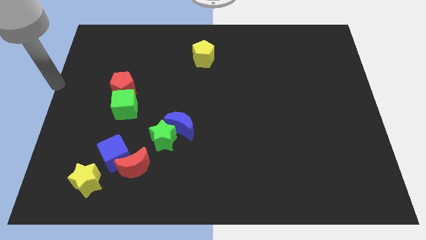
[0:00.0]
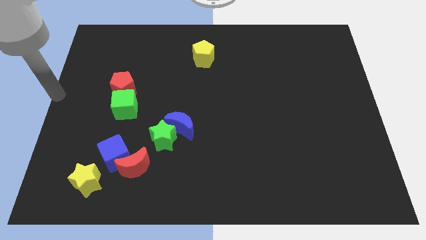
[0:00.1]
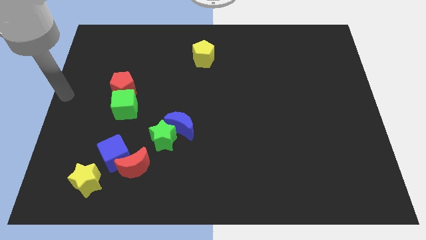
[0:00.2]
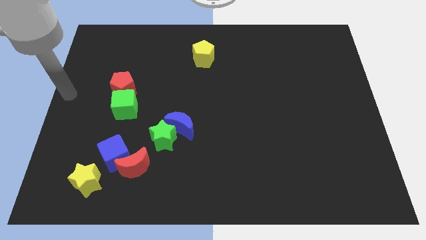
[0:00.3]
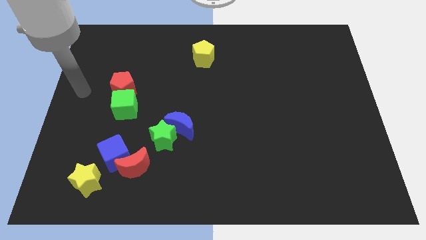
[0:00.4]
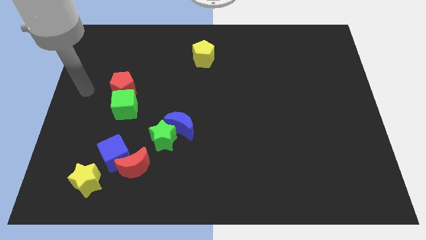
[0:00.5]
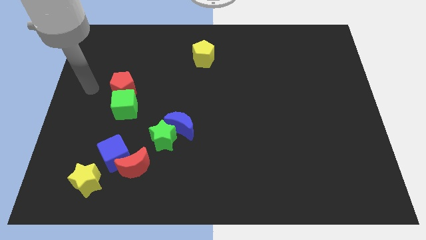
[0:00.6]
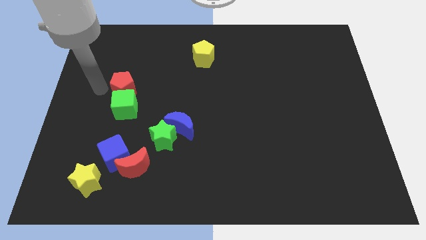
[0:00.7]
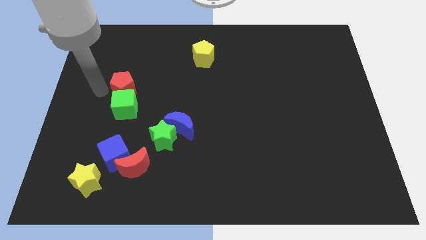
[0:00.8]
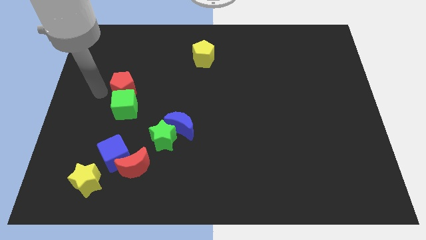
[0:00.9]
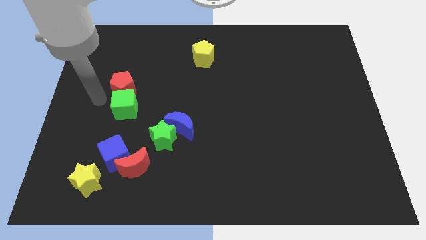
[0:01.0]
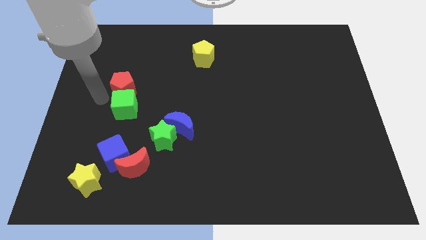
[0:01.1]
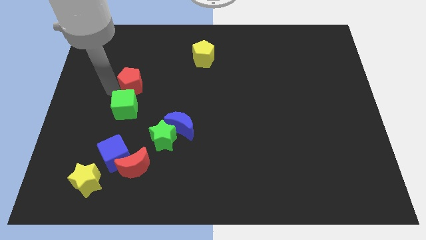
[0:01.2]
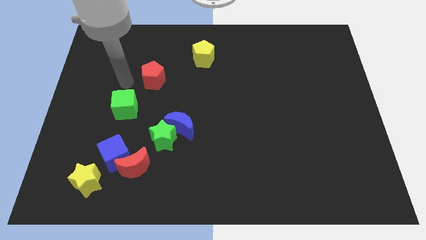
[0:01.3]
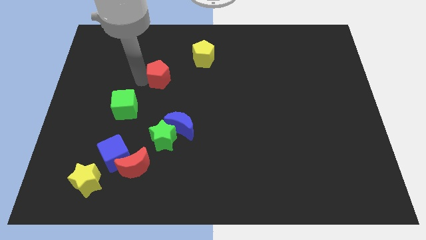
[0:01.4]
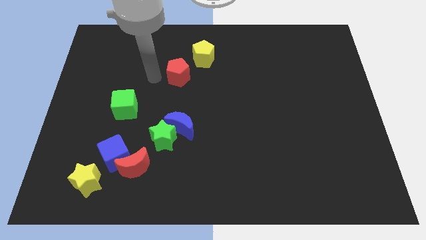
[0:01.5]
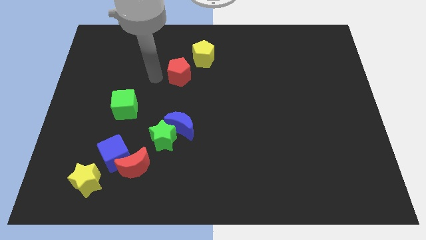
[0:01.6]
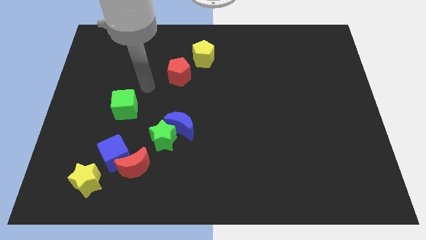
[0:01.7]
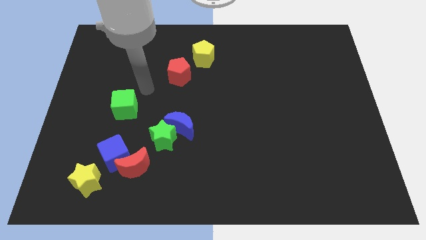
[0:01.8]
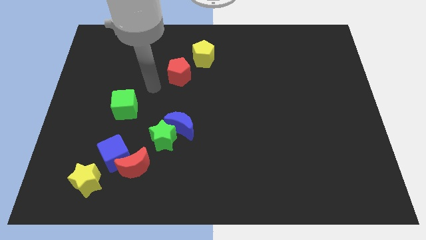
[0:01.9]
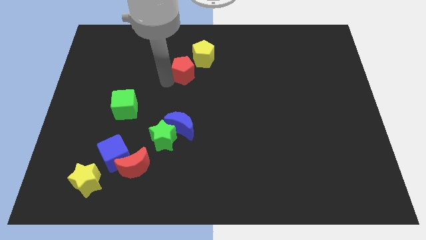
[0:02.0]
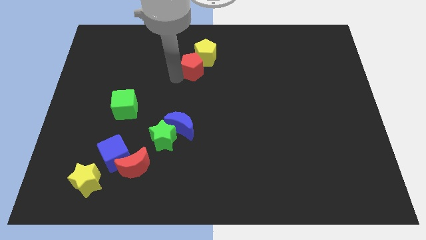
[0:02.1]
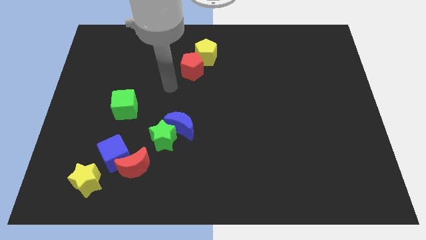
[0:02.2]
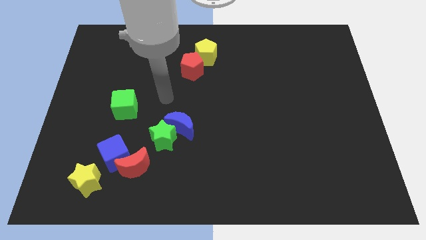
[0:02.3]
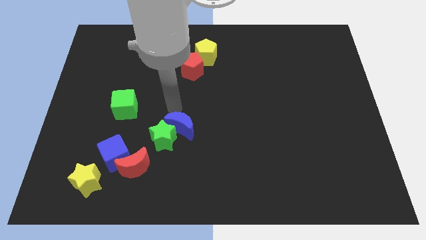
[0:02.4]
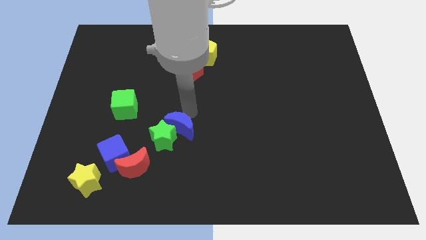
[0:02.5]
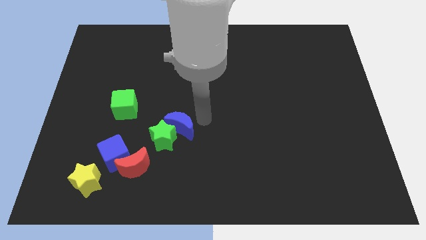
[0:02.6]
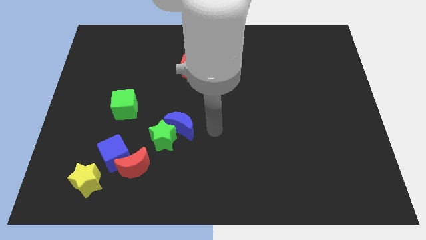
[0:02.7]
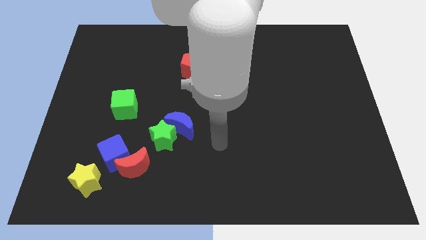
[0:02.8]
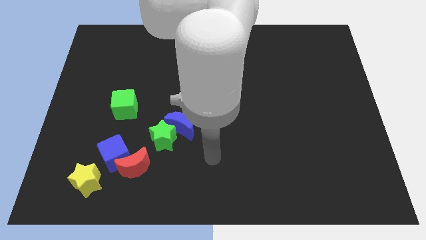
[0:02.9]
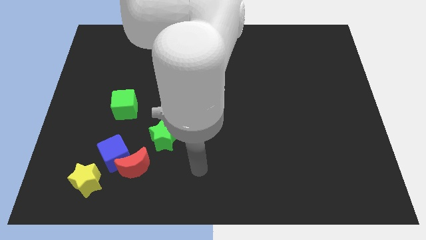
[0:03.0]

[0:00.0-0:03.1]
push the red pentagon into the yellow pentagon

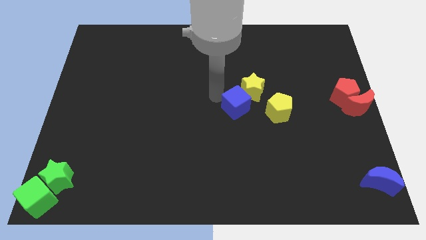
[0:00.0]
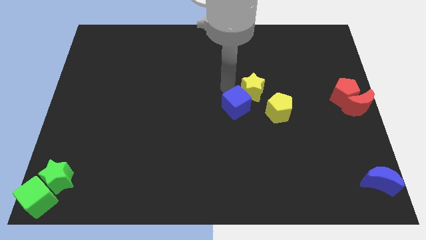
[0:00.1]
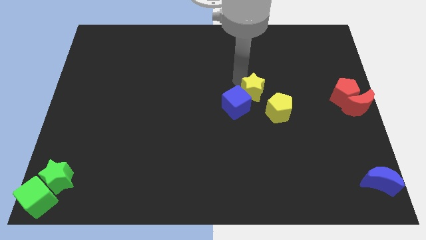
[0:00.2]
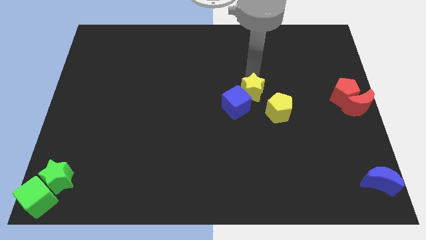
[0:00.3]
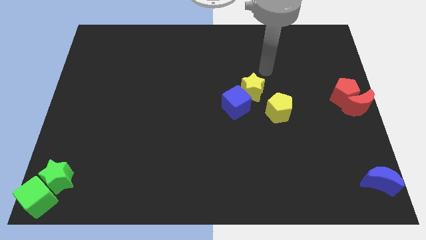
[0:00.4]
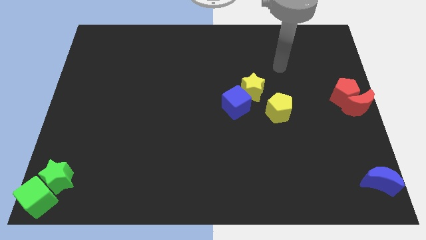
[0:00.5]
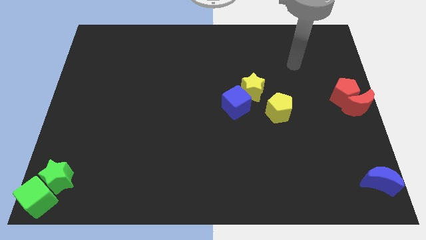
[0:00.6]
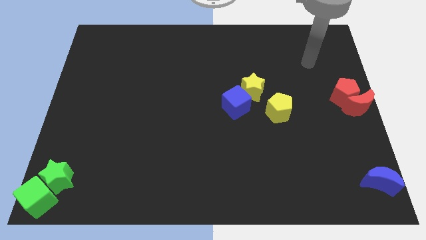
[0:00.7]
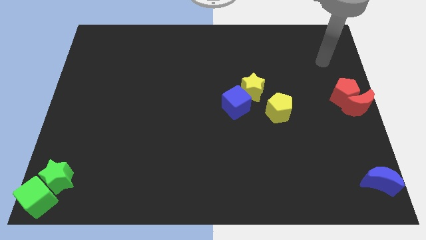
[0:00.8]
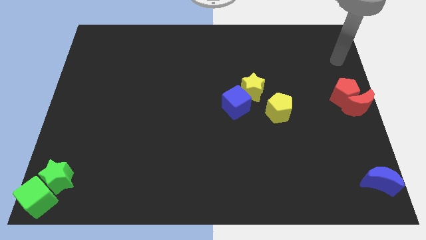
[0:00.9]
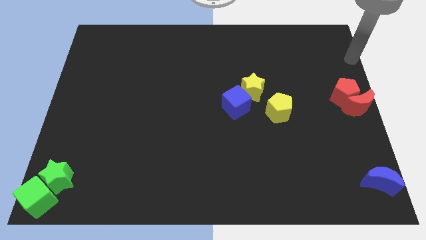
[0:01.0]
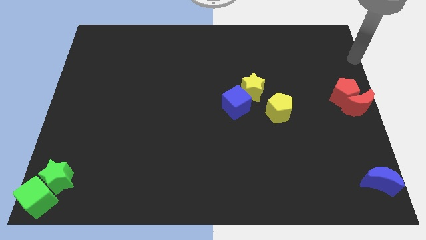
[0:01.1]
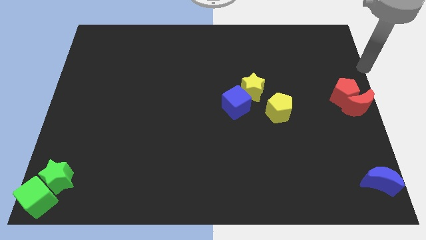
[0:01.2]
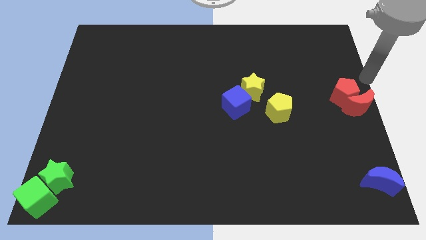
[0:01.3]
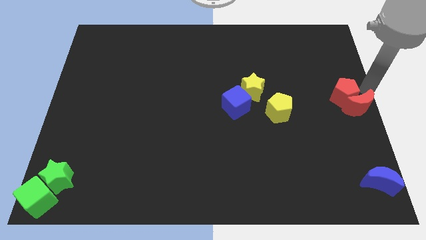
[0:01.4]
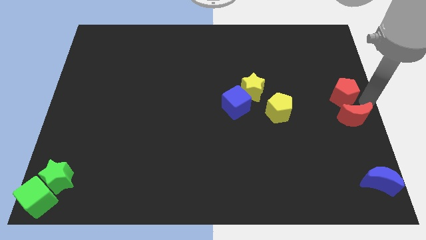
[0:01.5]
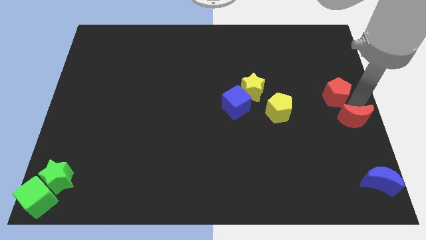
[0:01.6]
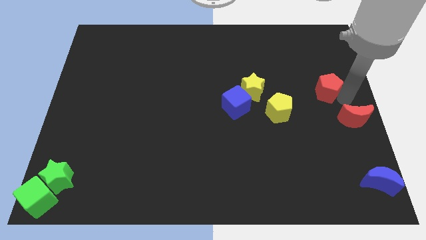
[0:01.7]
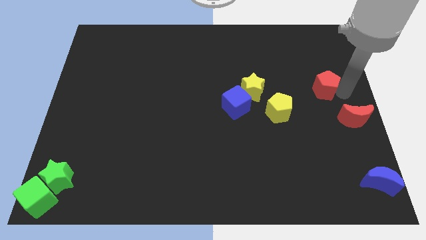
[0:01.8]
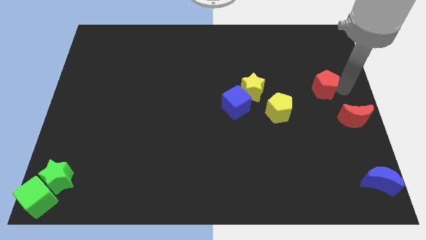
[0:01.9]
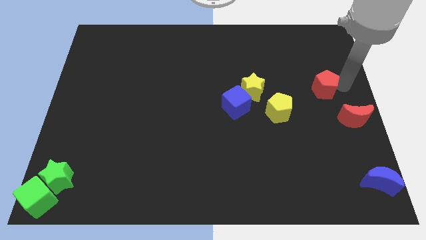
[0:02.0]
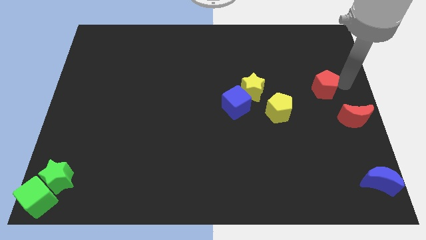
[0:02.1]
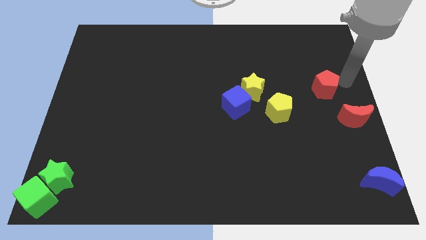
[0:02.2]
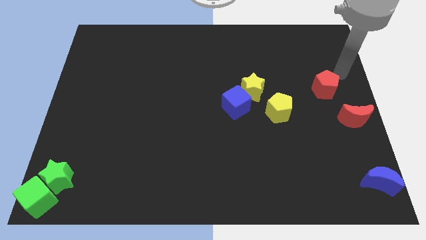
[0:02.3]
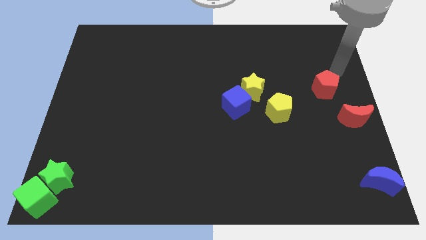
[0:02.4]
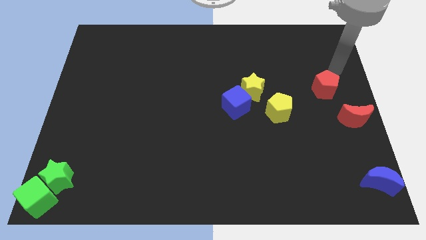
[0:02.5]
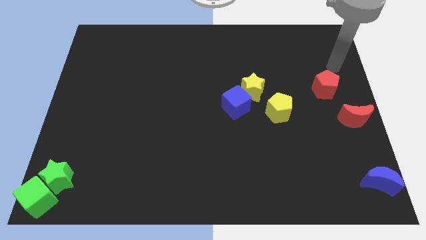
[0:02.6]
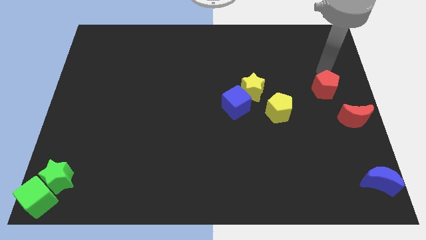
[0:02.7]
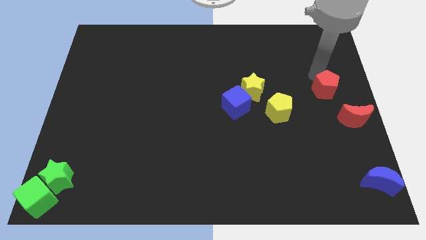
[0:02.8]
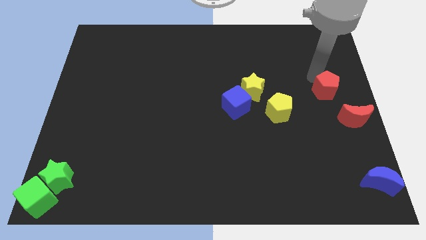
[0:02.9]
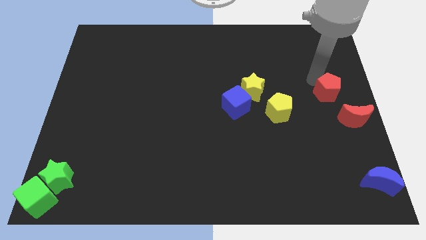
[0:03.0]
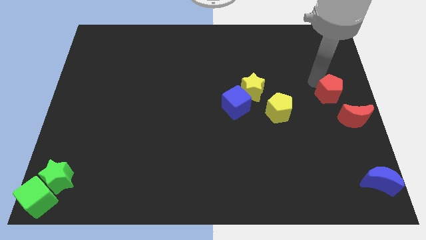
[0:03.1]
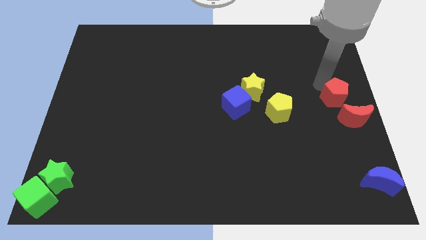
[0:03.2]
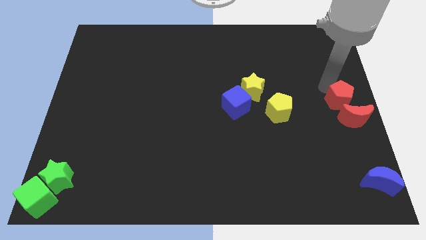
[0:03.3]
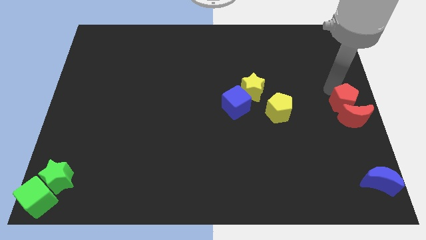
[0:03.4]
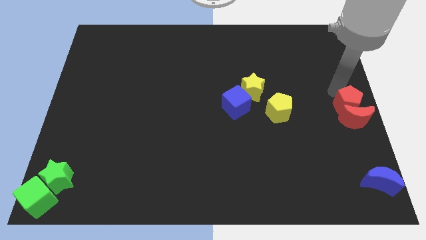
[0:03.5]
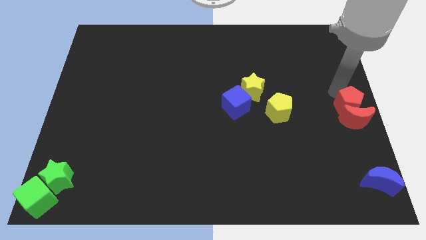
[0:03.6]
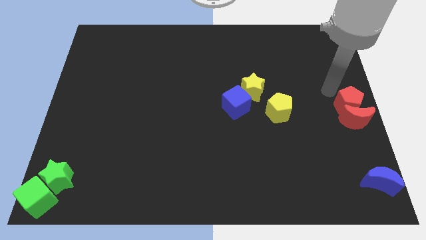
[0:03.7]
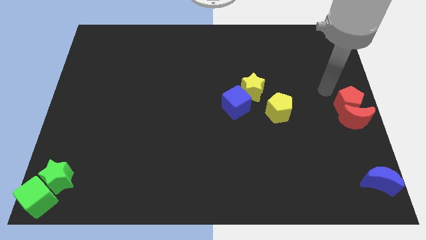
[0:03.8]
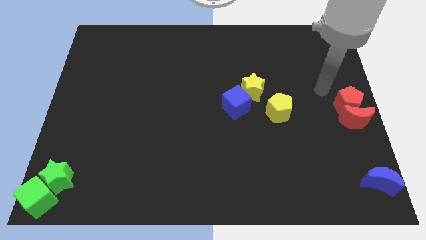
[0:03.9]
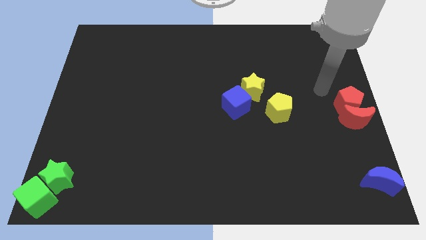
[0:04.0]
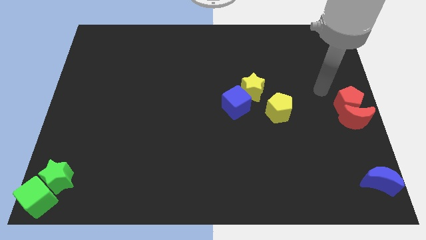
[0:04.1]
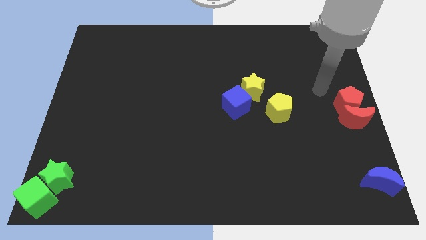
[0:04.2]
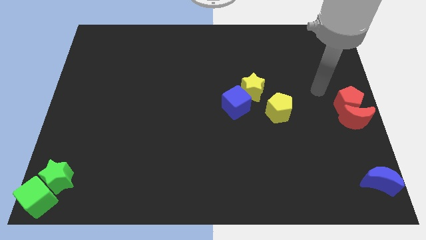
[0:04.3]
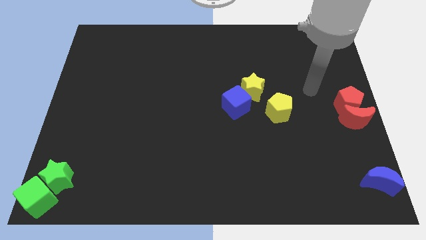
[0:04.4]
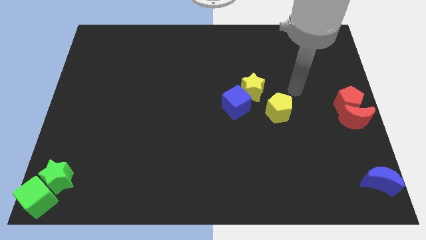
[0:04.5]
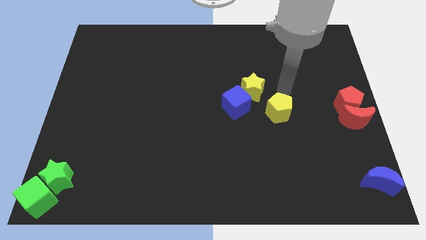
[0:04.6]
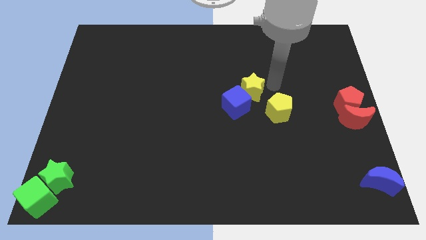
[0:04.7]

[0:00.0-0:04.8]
separate the red blocks and make them together above the blue crescent

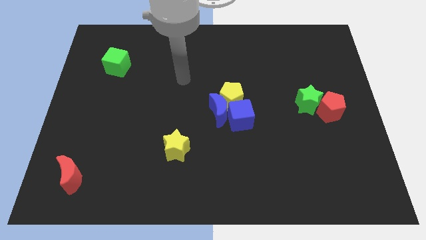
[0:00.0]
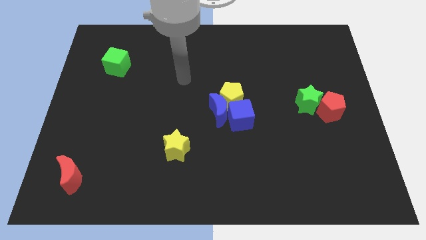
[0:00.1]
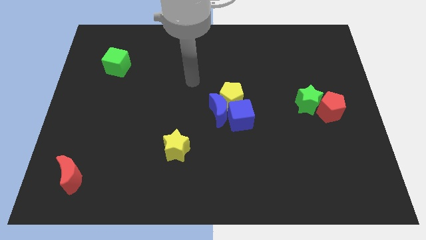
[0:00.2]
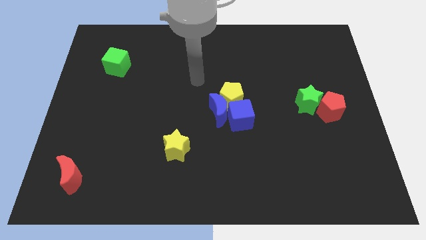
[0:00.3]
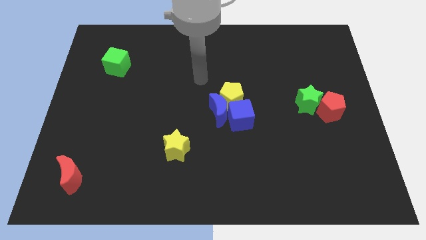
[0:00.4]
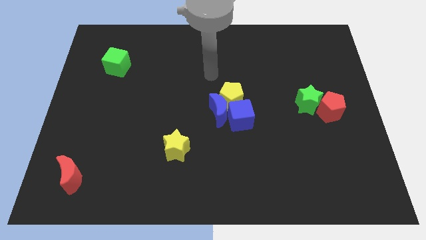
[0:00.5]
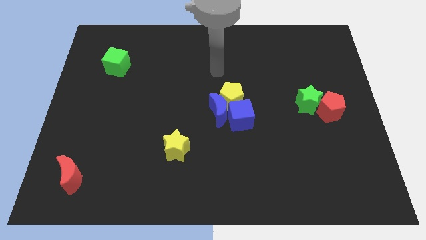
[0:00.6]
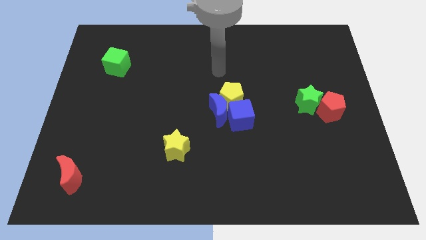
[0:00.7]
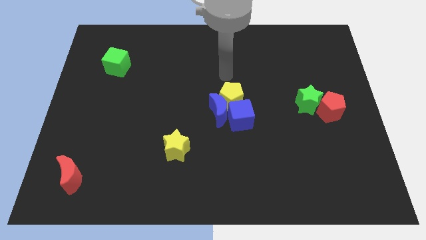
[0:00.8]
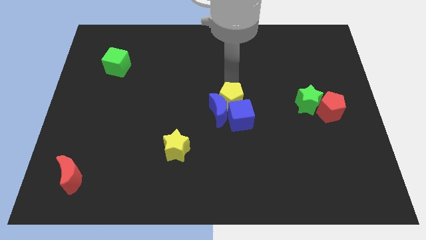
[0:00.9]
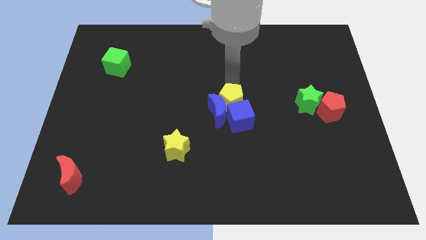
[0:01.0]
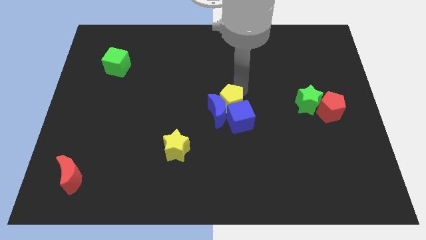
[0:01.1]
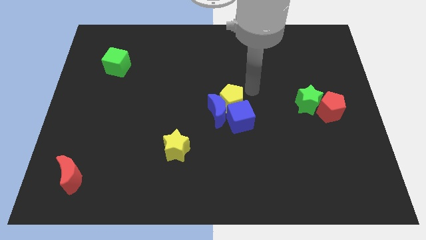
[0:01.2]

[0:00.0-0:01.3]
tap yellow pentagon on its top
